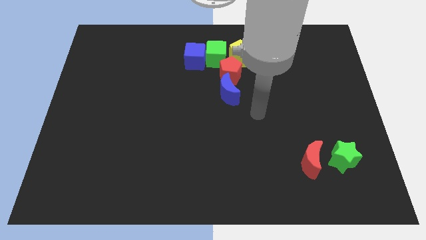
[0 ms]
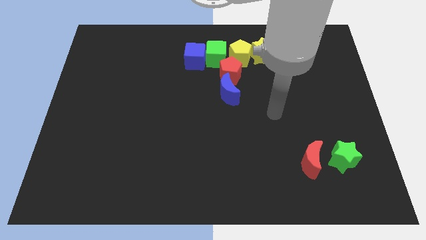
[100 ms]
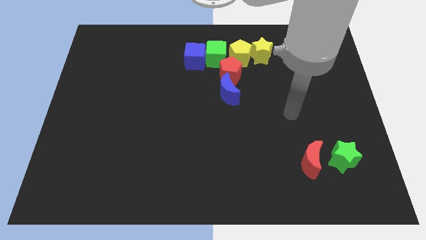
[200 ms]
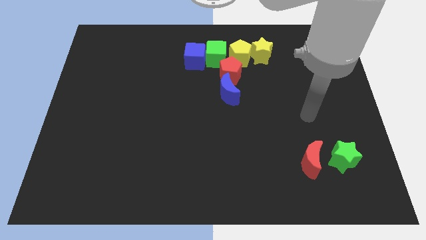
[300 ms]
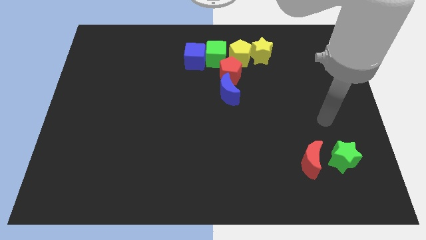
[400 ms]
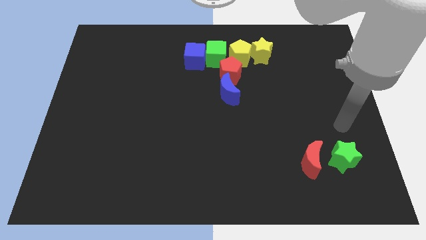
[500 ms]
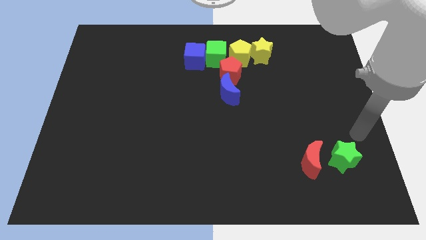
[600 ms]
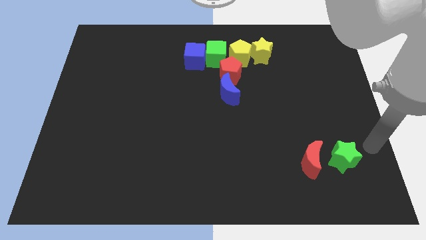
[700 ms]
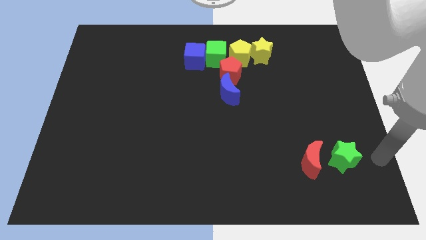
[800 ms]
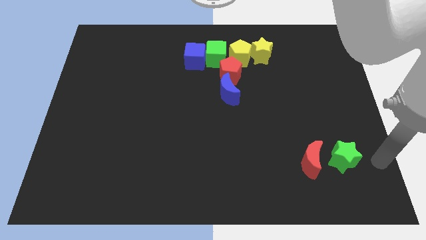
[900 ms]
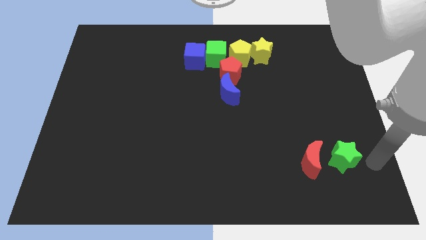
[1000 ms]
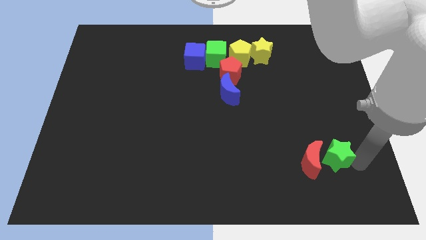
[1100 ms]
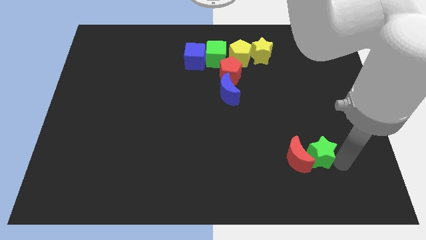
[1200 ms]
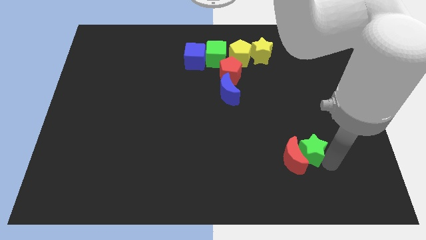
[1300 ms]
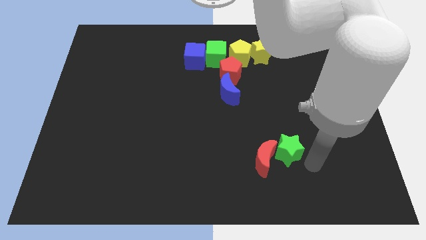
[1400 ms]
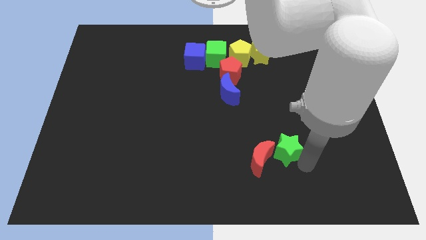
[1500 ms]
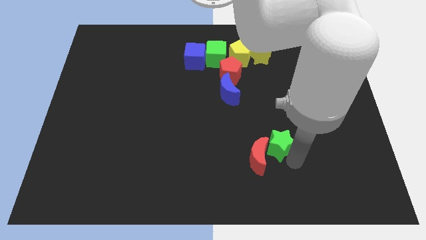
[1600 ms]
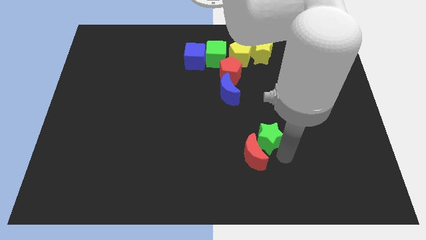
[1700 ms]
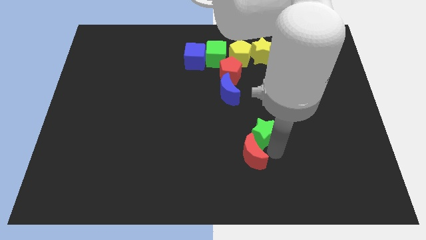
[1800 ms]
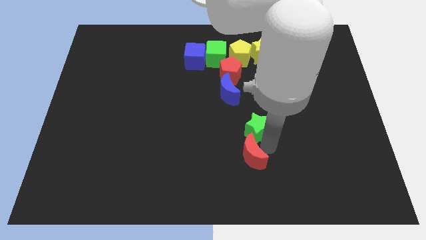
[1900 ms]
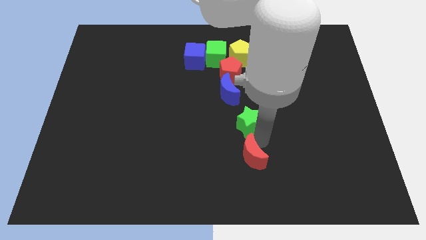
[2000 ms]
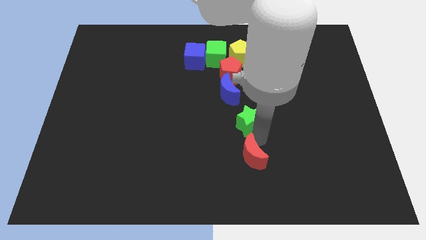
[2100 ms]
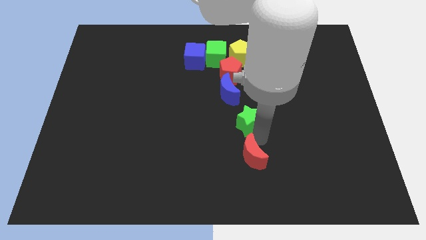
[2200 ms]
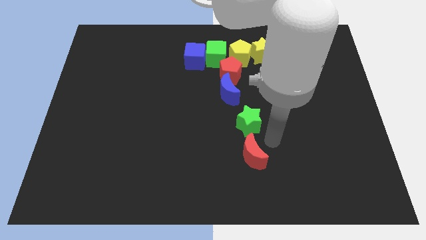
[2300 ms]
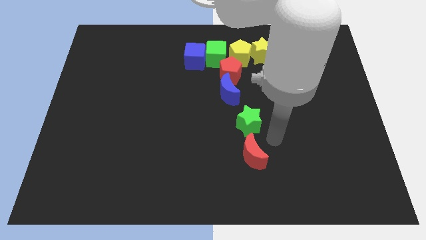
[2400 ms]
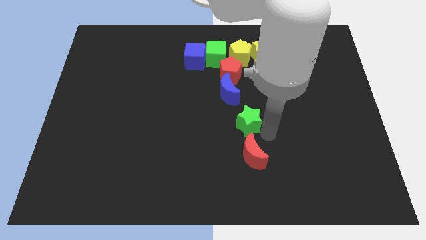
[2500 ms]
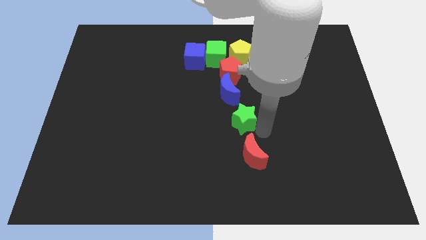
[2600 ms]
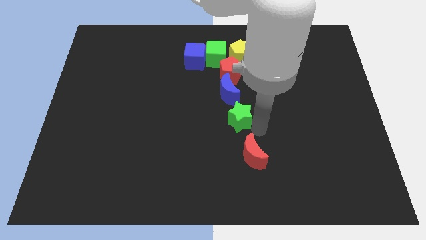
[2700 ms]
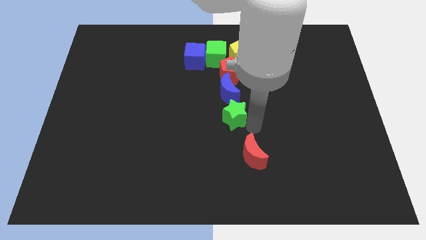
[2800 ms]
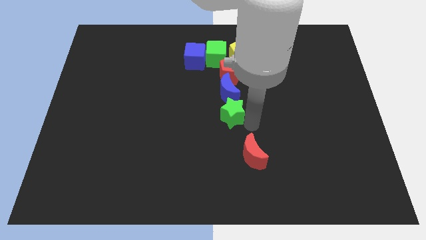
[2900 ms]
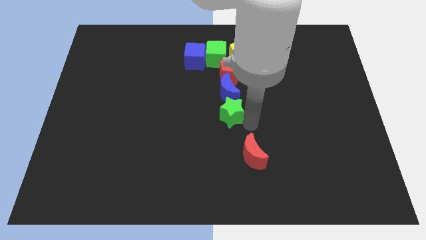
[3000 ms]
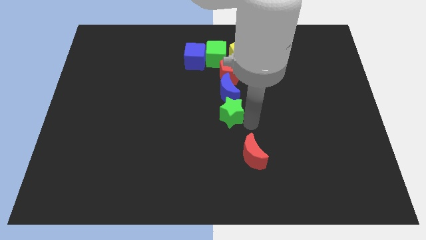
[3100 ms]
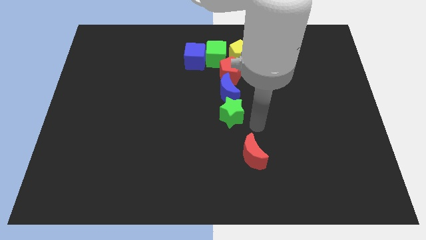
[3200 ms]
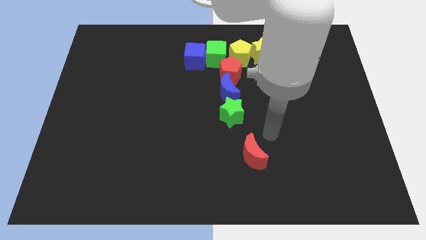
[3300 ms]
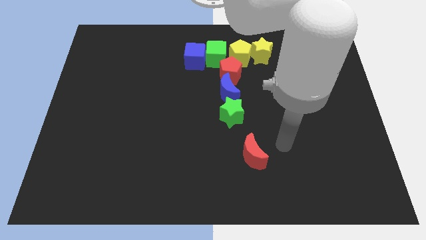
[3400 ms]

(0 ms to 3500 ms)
move green star to the bottom of the blue moon

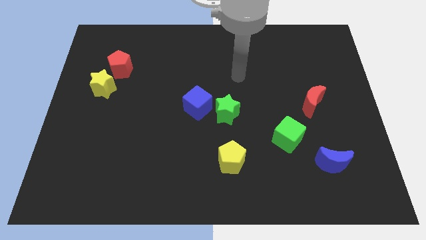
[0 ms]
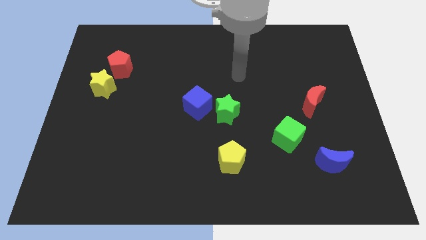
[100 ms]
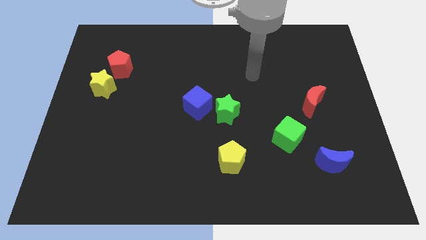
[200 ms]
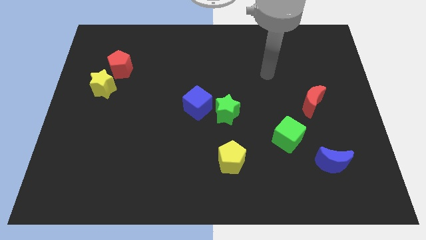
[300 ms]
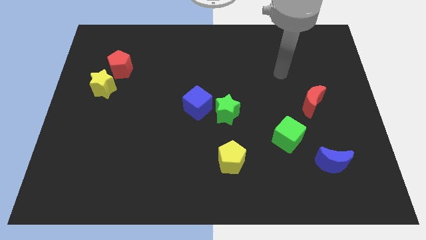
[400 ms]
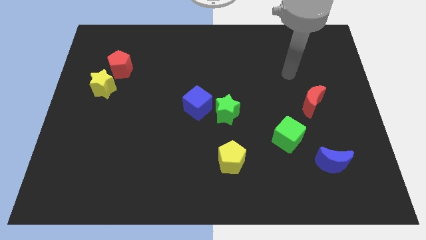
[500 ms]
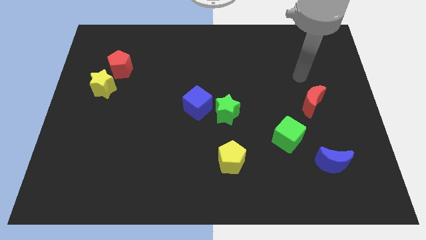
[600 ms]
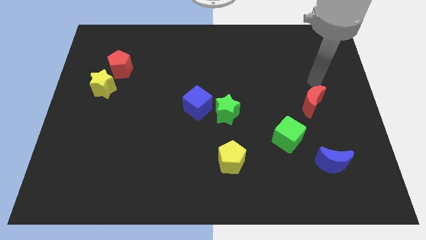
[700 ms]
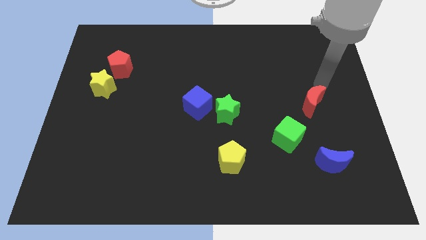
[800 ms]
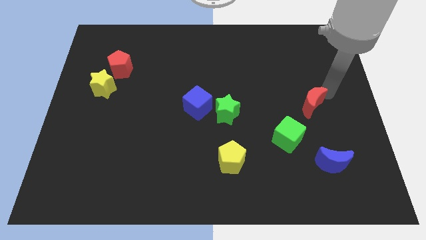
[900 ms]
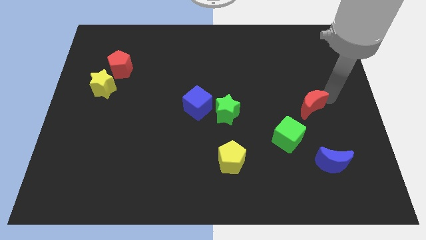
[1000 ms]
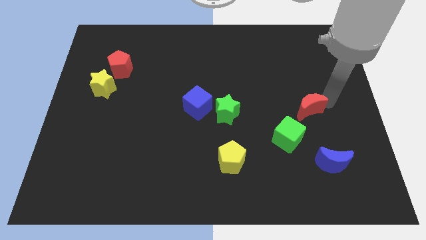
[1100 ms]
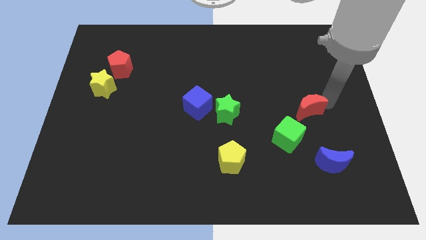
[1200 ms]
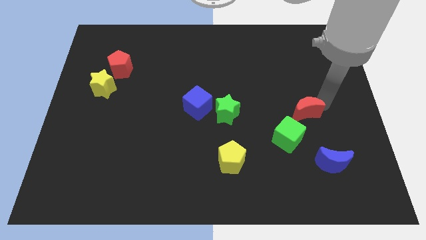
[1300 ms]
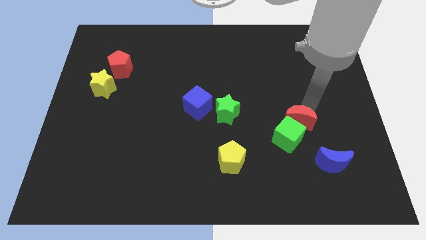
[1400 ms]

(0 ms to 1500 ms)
slide the red moon towards the green cube

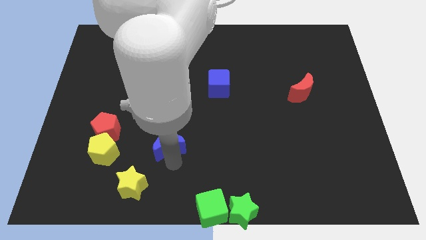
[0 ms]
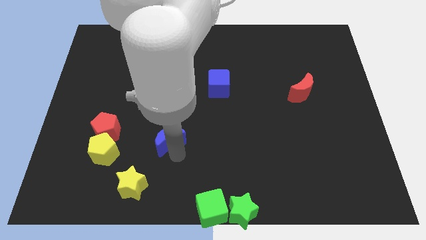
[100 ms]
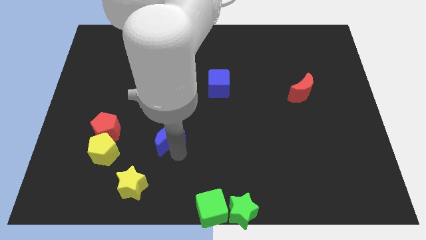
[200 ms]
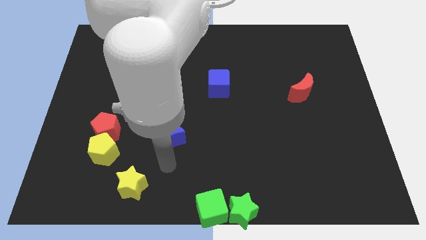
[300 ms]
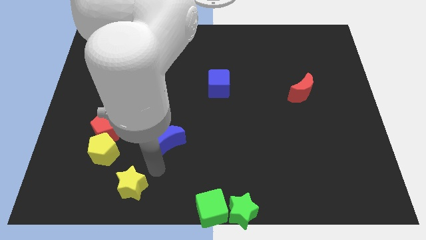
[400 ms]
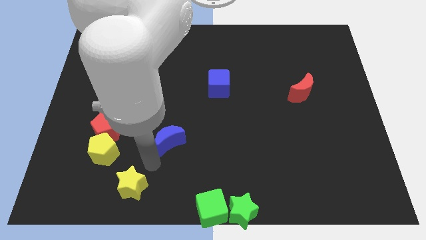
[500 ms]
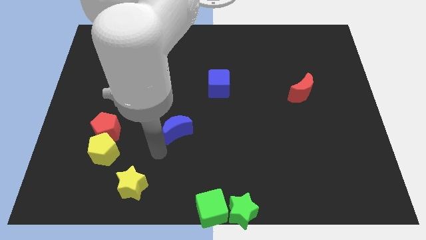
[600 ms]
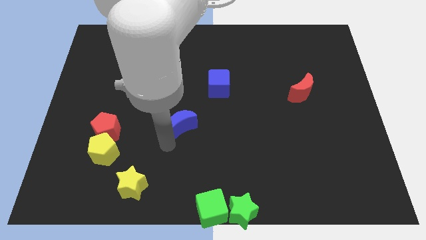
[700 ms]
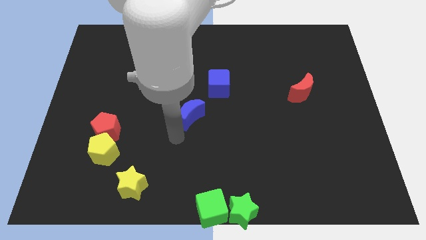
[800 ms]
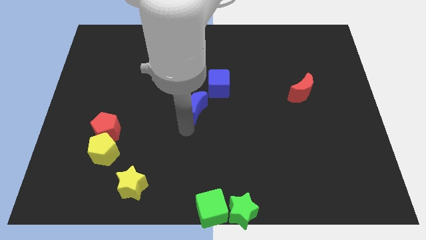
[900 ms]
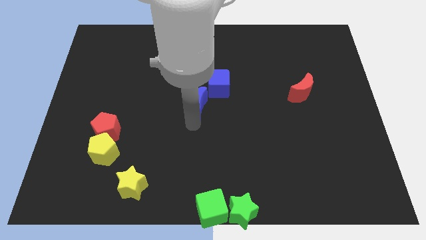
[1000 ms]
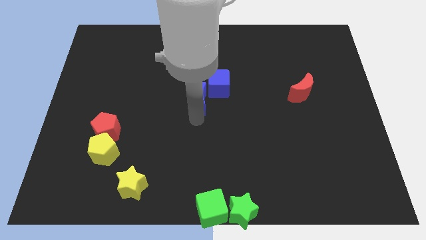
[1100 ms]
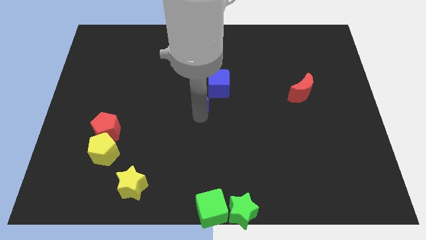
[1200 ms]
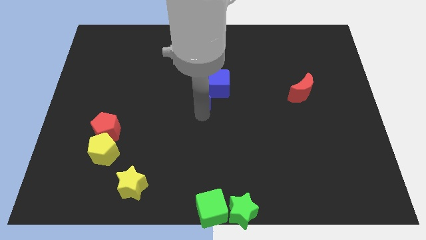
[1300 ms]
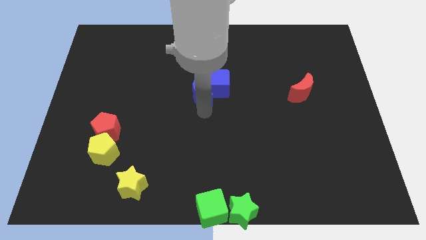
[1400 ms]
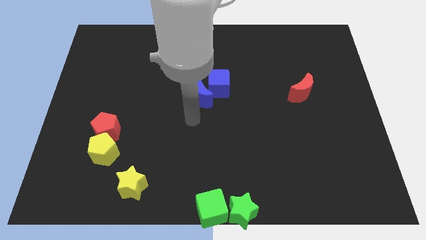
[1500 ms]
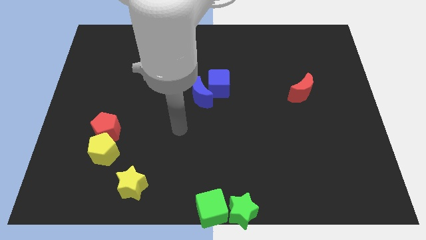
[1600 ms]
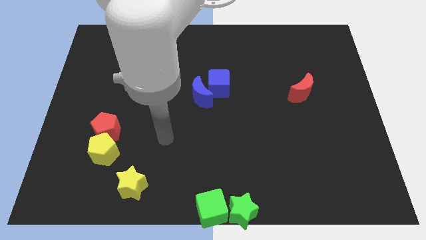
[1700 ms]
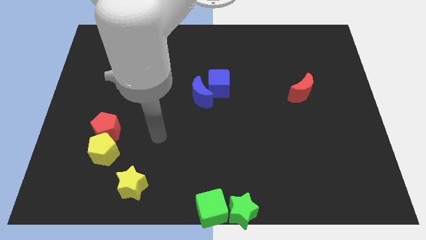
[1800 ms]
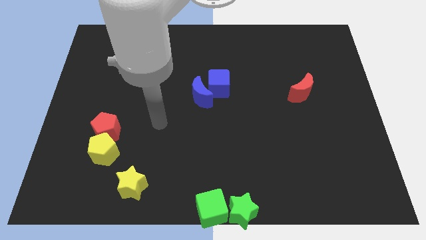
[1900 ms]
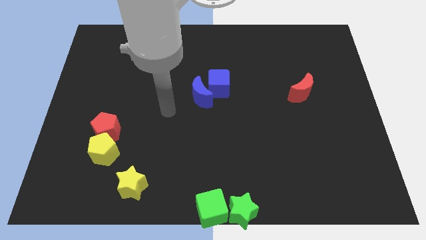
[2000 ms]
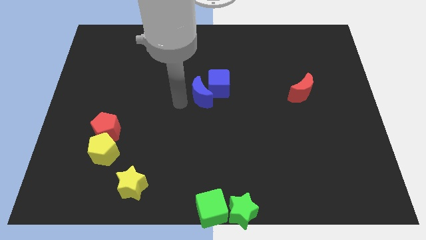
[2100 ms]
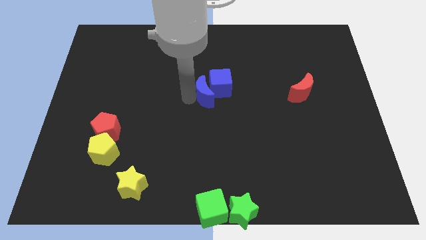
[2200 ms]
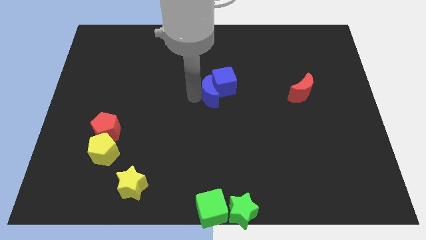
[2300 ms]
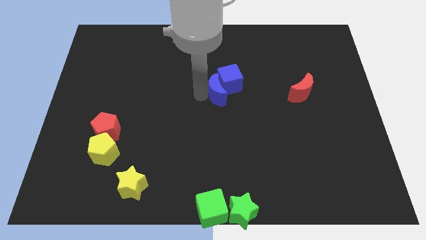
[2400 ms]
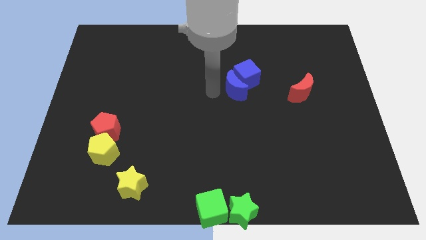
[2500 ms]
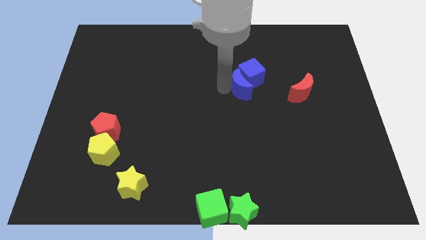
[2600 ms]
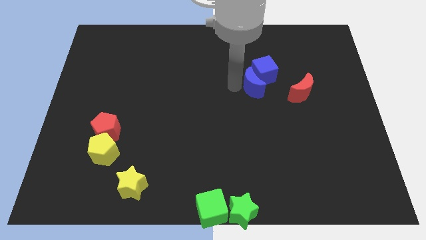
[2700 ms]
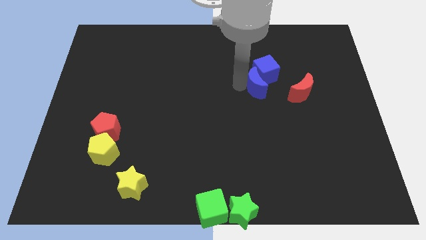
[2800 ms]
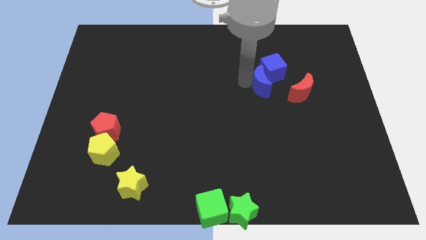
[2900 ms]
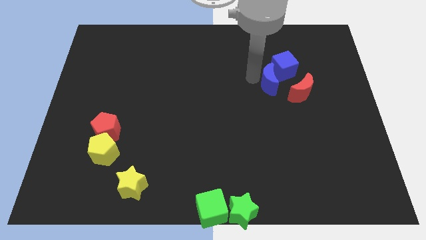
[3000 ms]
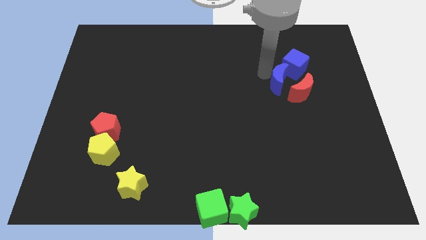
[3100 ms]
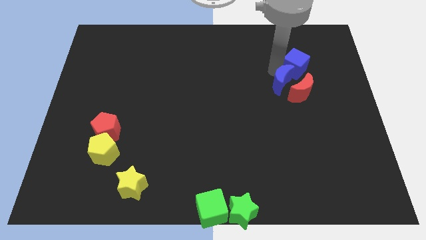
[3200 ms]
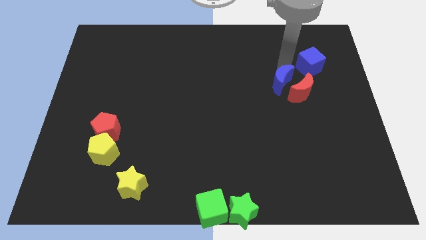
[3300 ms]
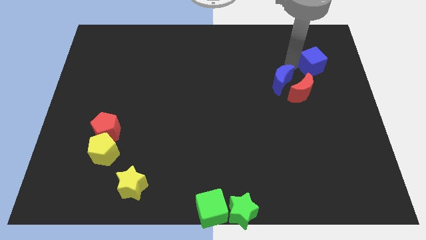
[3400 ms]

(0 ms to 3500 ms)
place blue crescent diagonally to the top left of the red crescent

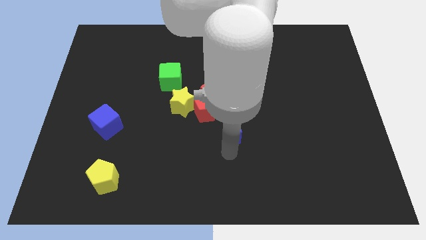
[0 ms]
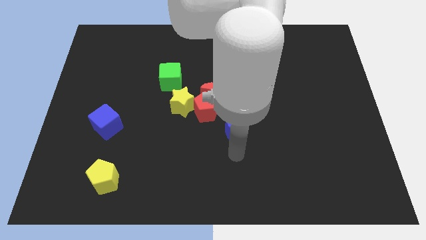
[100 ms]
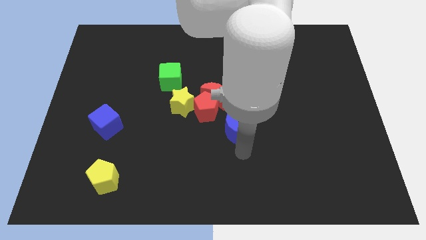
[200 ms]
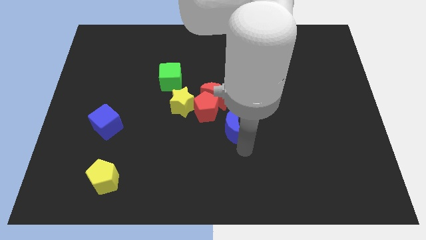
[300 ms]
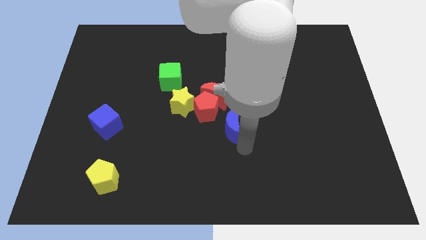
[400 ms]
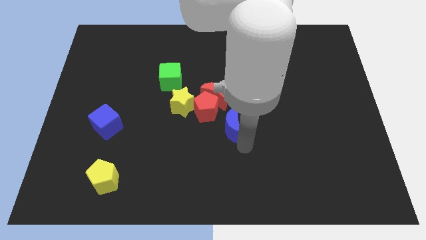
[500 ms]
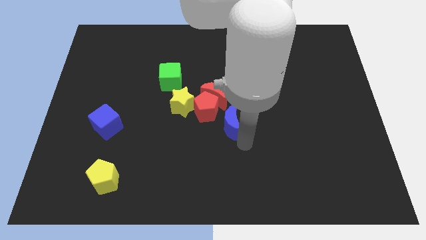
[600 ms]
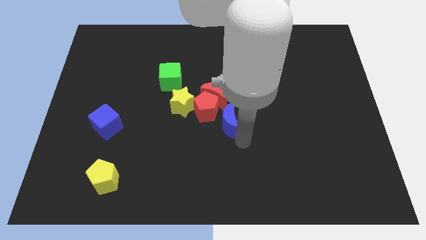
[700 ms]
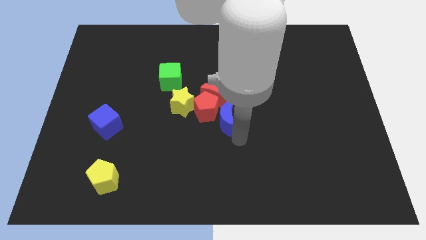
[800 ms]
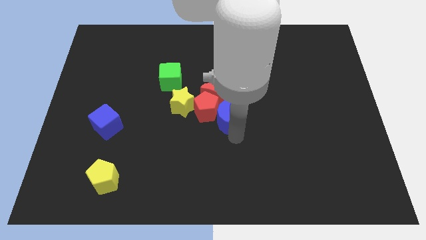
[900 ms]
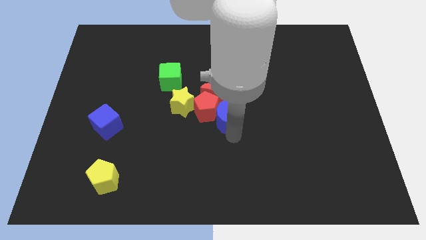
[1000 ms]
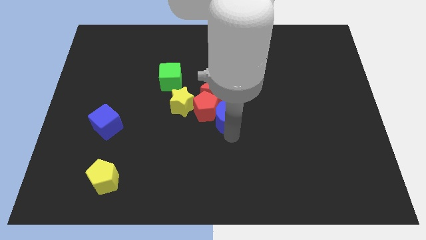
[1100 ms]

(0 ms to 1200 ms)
push the blue crescent into the red pentagon
